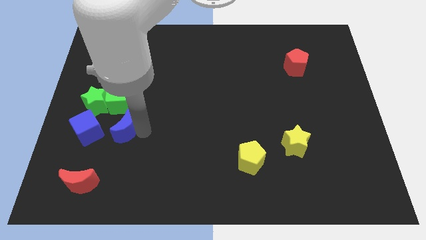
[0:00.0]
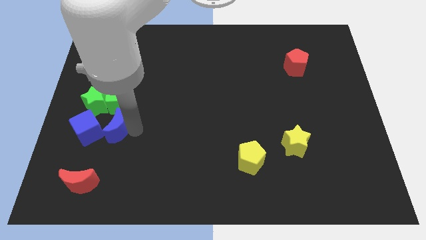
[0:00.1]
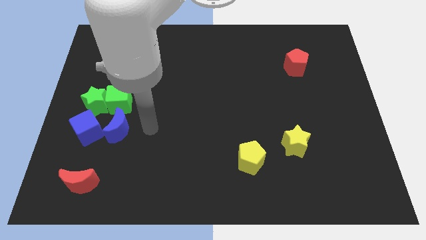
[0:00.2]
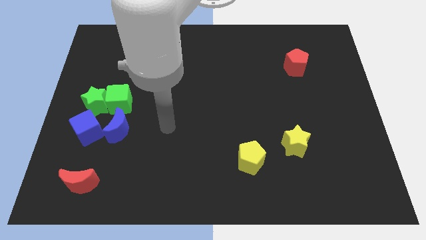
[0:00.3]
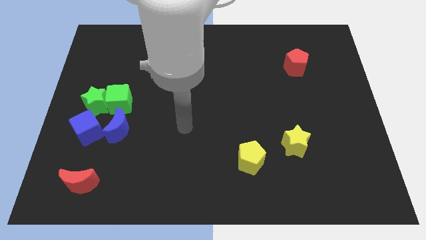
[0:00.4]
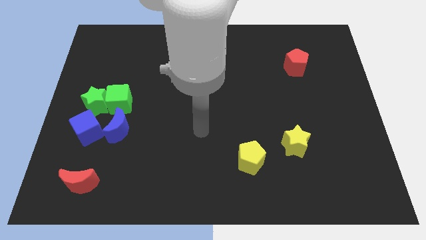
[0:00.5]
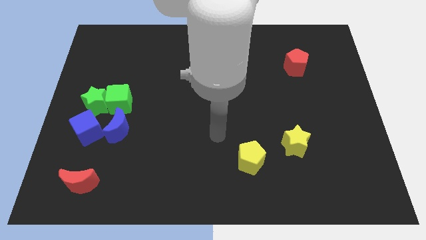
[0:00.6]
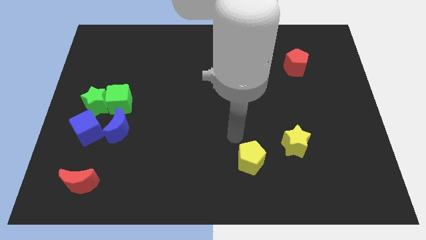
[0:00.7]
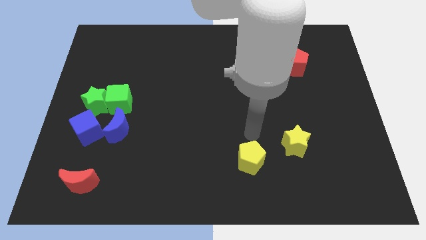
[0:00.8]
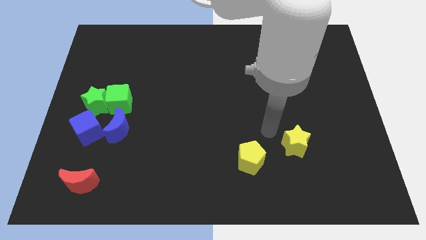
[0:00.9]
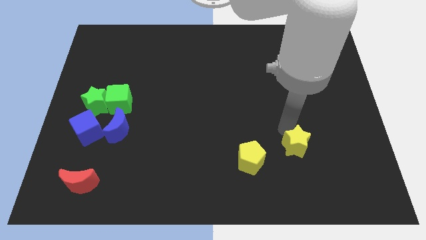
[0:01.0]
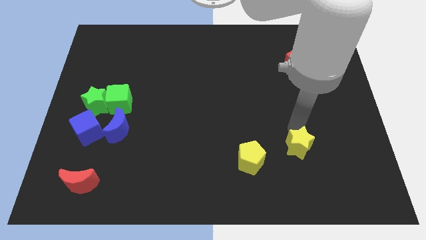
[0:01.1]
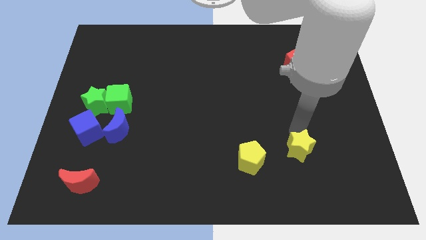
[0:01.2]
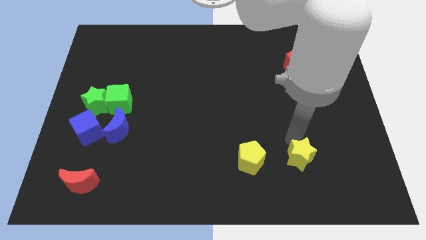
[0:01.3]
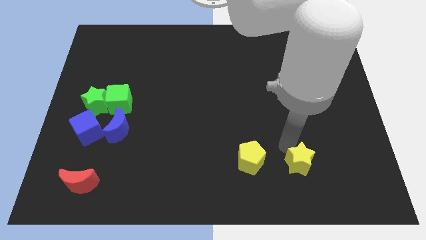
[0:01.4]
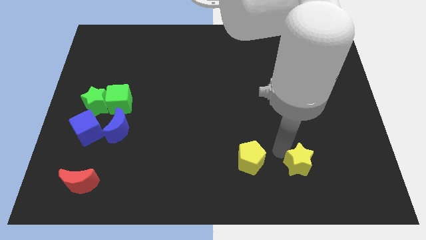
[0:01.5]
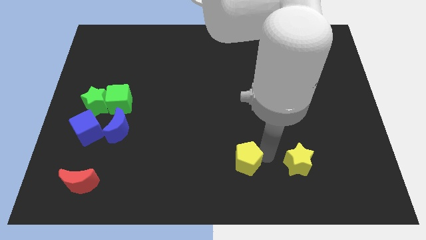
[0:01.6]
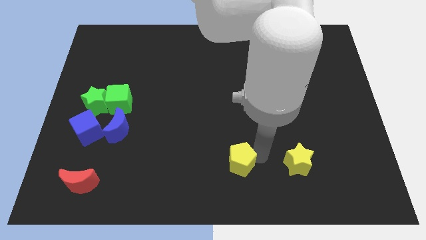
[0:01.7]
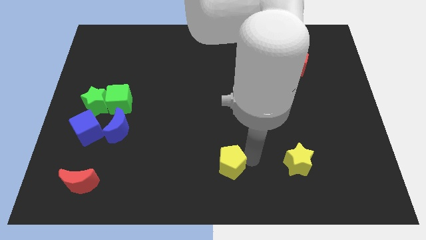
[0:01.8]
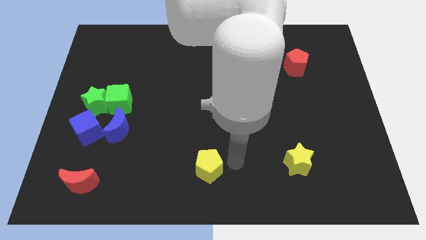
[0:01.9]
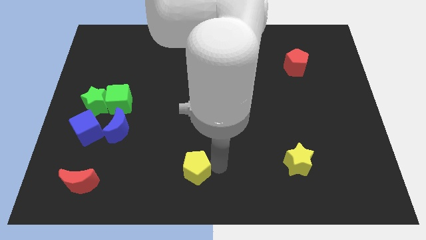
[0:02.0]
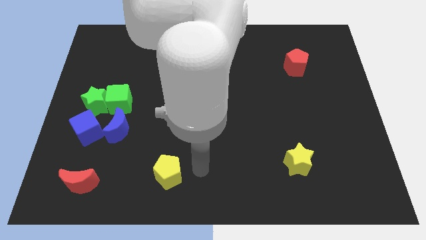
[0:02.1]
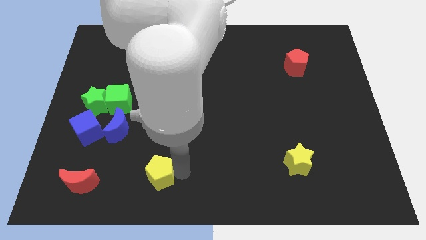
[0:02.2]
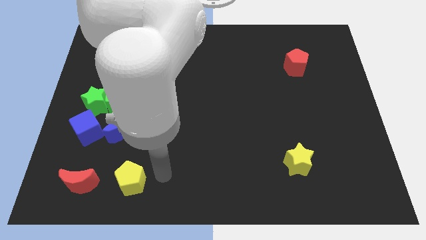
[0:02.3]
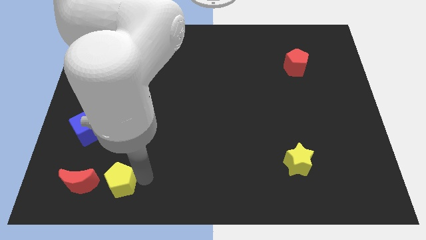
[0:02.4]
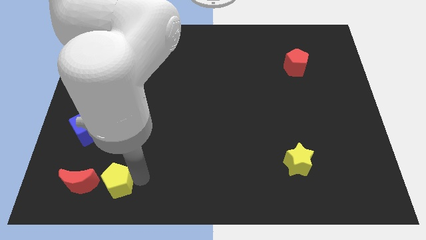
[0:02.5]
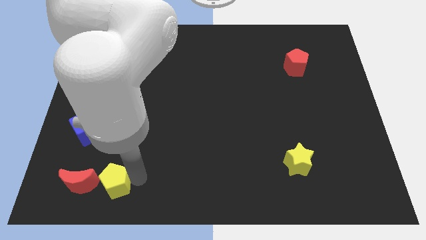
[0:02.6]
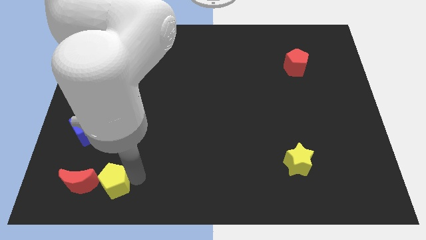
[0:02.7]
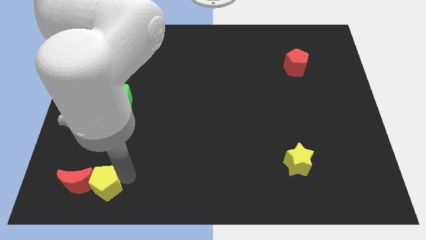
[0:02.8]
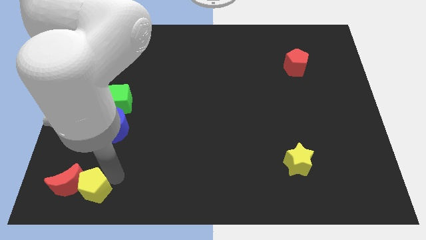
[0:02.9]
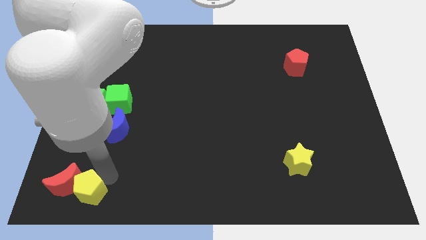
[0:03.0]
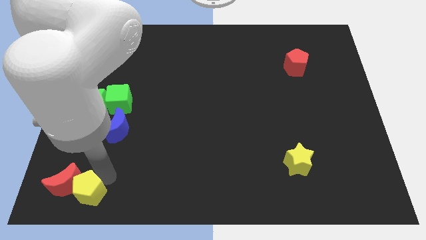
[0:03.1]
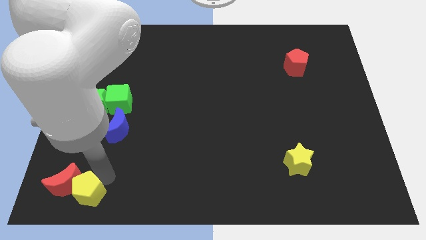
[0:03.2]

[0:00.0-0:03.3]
push the yellow pentagon into the right side of the red moon

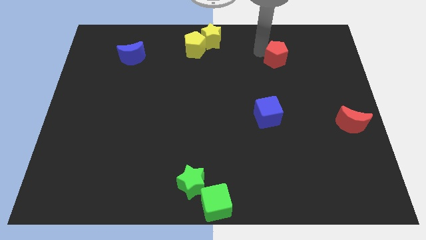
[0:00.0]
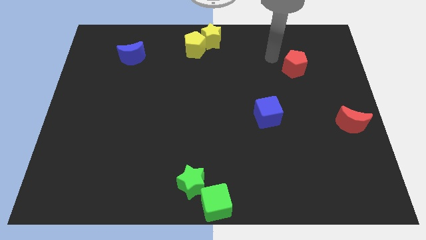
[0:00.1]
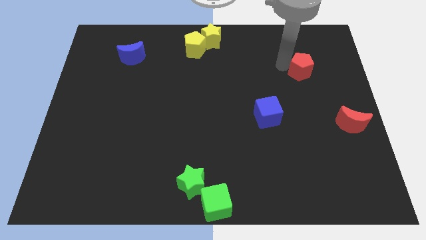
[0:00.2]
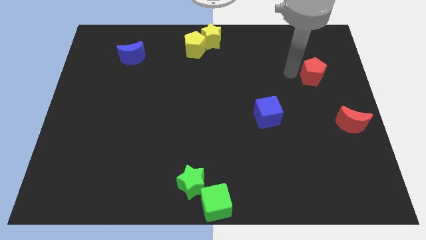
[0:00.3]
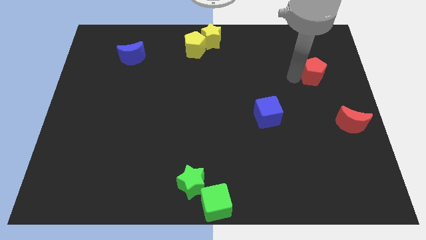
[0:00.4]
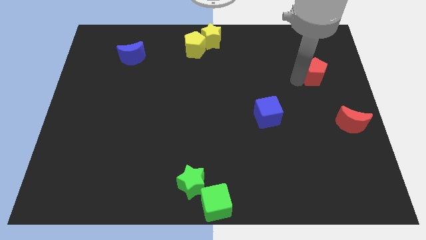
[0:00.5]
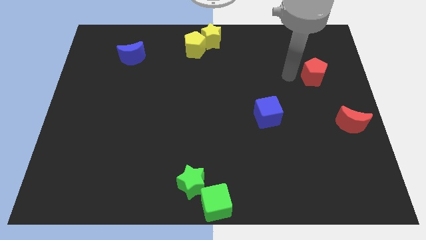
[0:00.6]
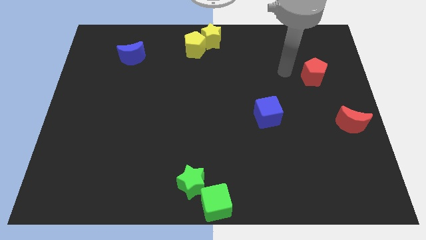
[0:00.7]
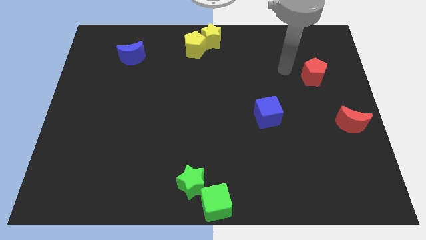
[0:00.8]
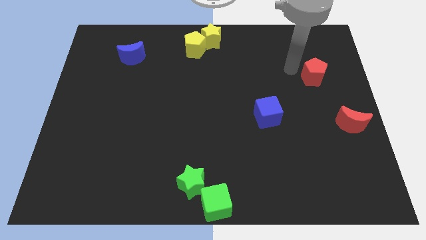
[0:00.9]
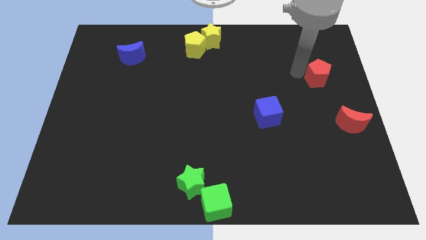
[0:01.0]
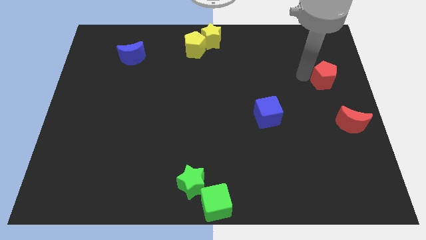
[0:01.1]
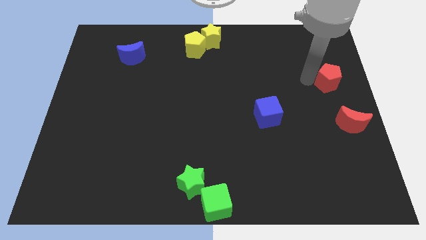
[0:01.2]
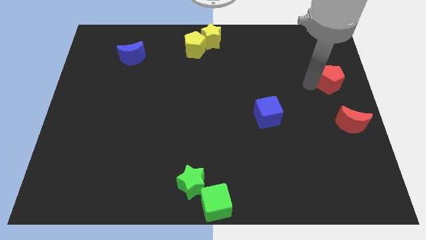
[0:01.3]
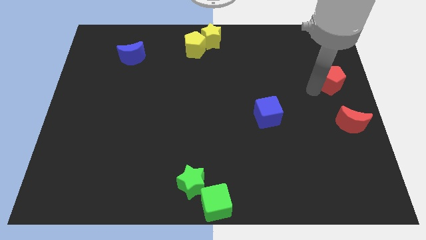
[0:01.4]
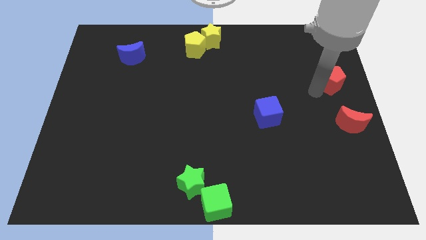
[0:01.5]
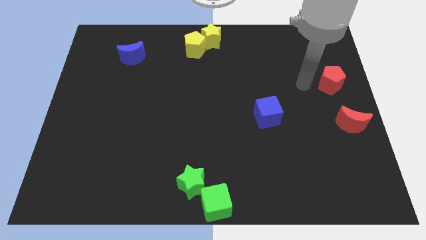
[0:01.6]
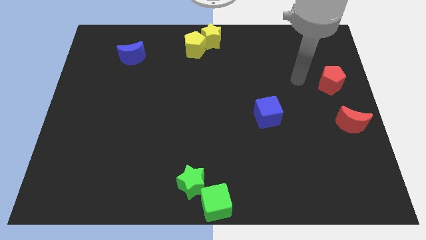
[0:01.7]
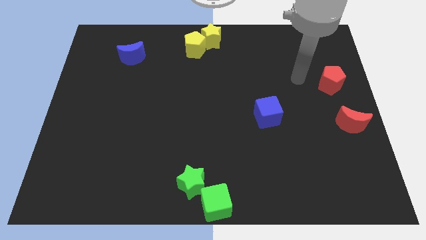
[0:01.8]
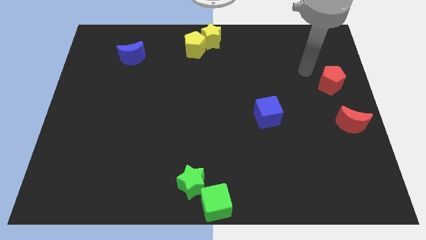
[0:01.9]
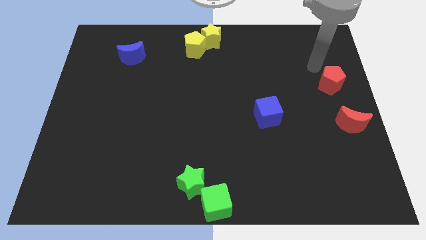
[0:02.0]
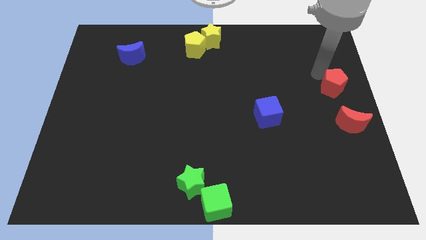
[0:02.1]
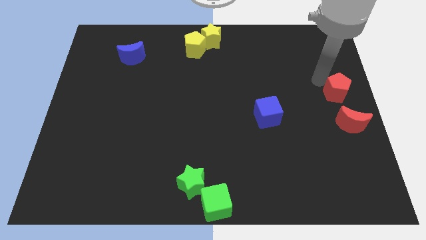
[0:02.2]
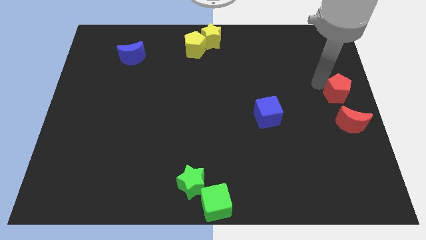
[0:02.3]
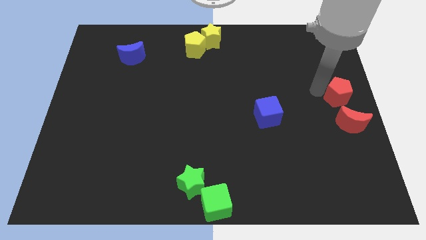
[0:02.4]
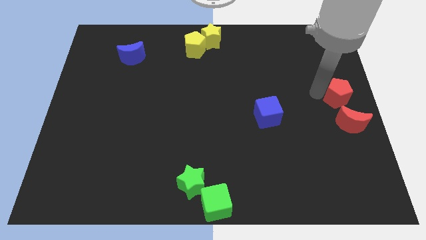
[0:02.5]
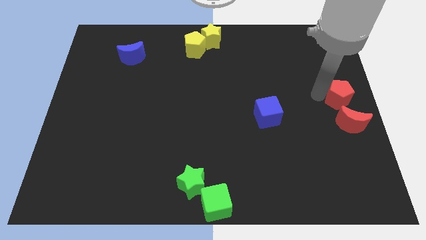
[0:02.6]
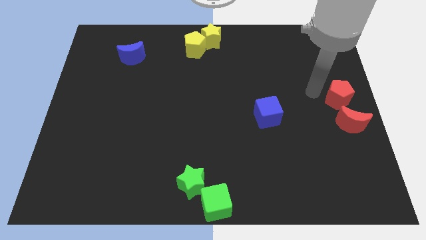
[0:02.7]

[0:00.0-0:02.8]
slide the red pentagon close to the red moon

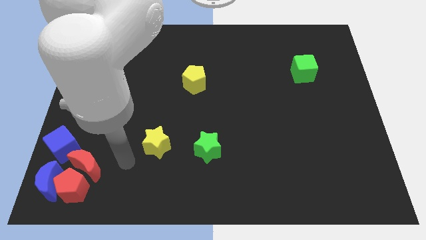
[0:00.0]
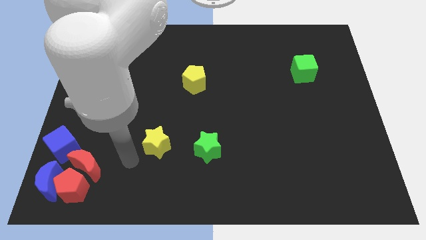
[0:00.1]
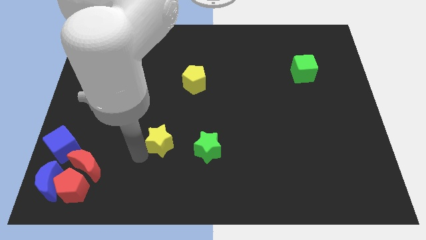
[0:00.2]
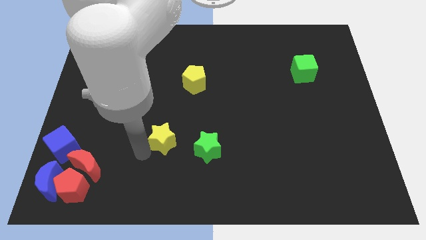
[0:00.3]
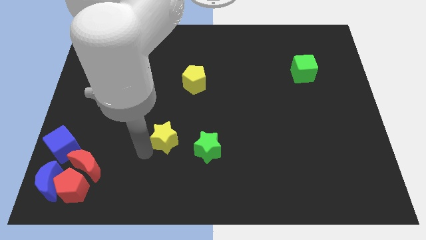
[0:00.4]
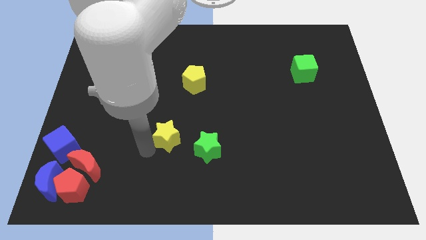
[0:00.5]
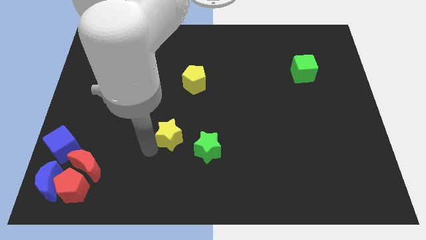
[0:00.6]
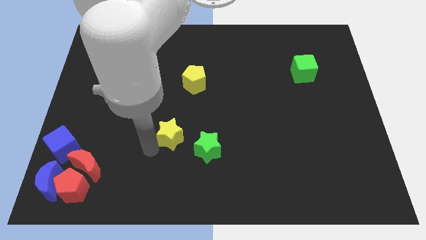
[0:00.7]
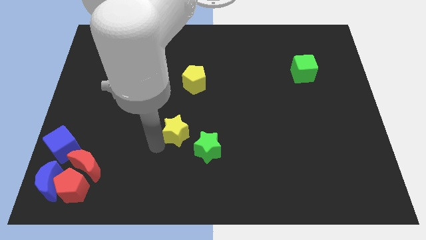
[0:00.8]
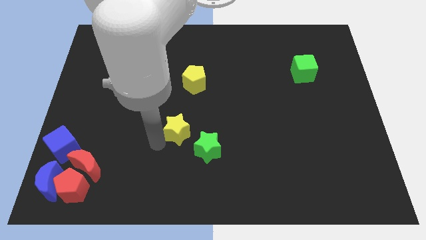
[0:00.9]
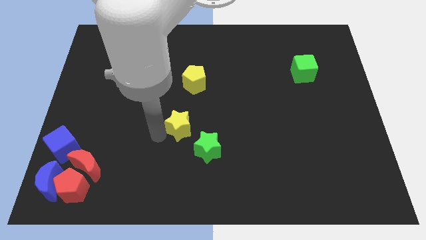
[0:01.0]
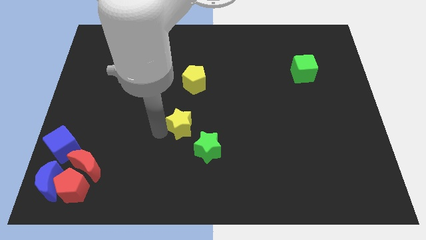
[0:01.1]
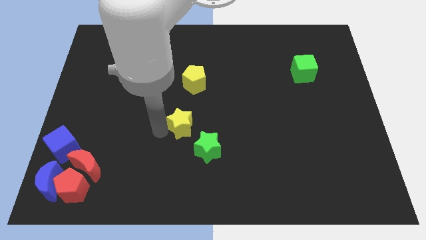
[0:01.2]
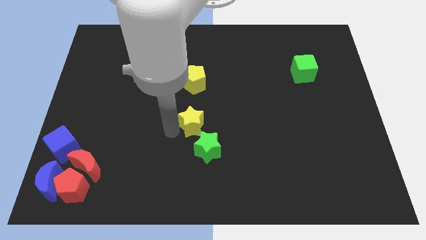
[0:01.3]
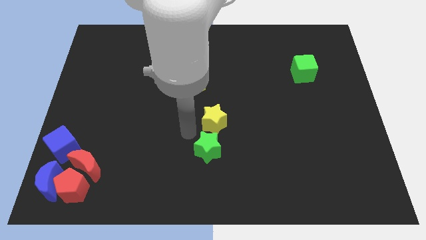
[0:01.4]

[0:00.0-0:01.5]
place the yellow star above the green star

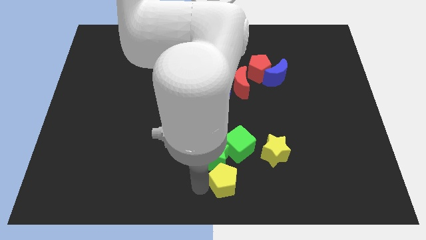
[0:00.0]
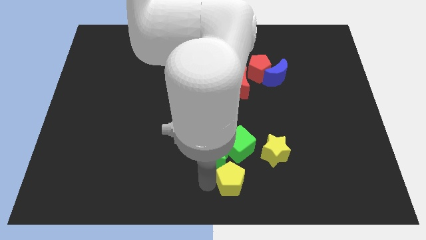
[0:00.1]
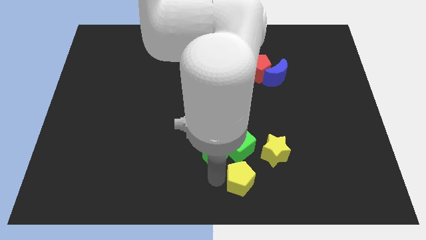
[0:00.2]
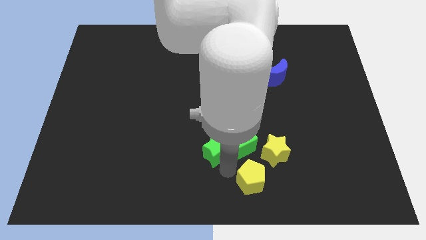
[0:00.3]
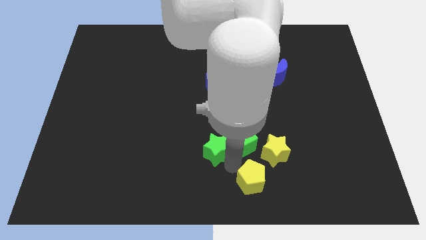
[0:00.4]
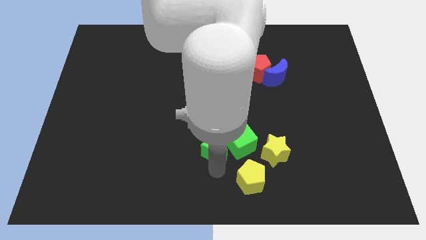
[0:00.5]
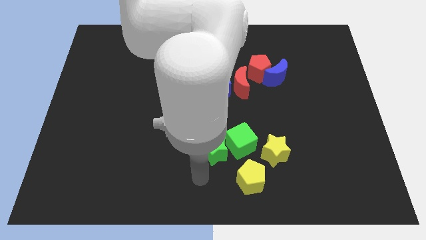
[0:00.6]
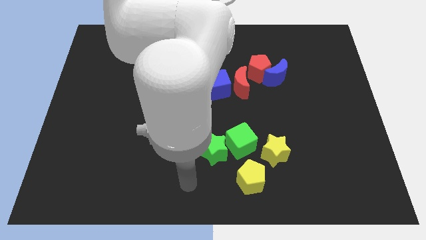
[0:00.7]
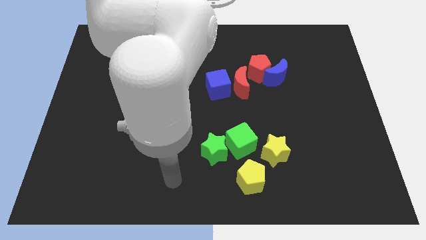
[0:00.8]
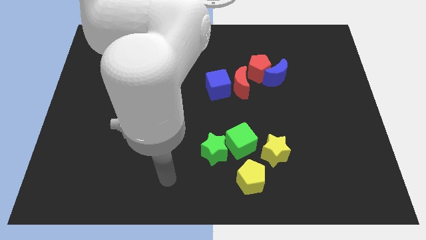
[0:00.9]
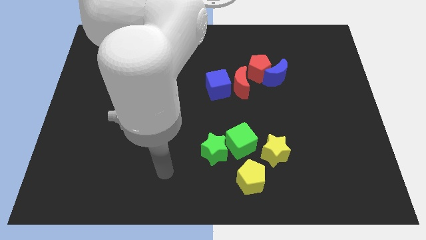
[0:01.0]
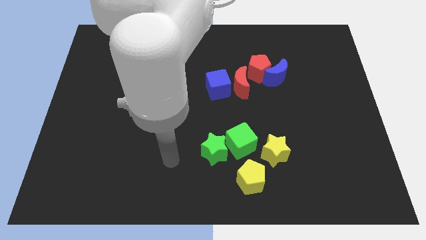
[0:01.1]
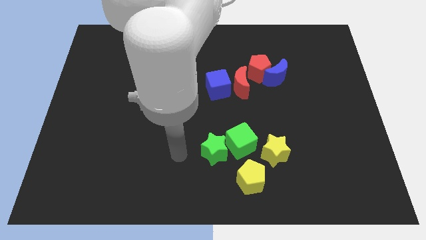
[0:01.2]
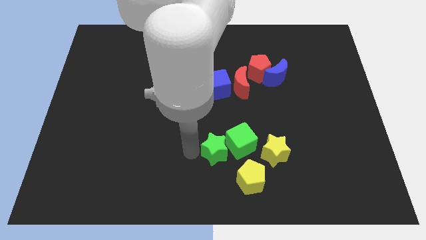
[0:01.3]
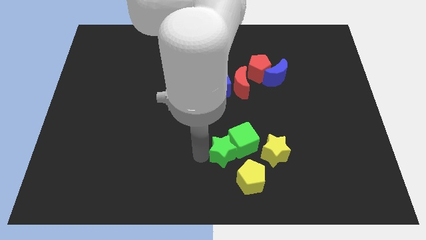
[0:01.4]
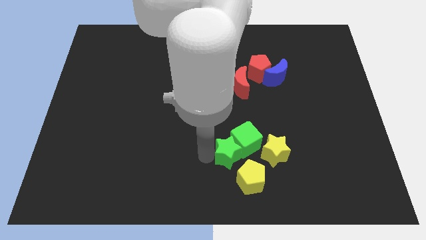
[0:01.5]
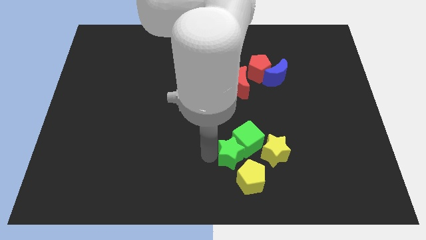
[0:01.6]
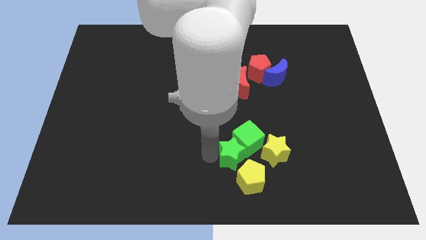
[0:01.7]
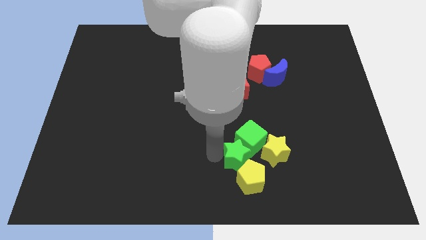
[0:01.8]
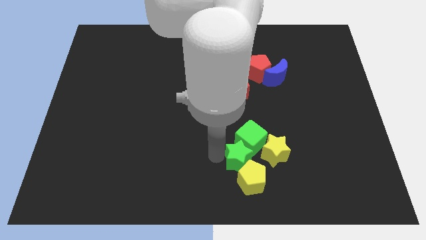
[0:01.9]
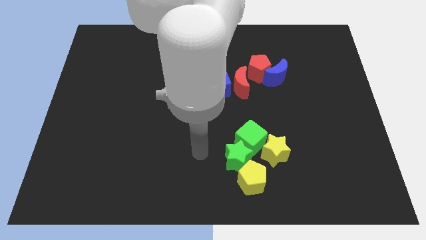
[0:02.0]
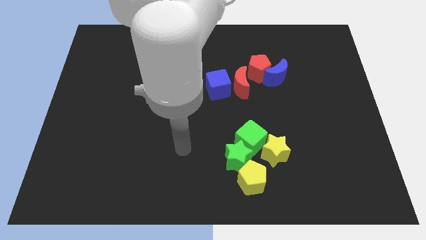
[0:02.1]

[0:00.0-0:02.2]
place yellow pentagon below green cube
